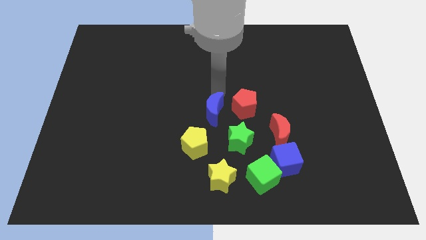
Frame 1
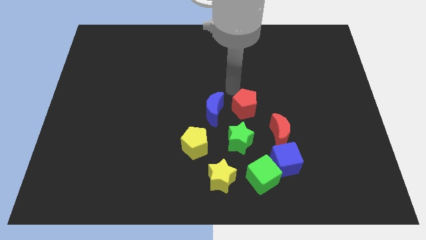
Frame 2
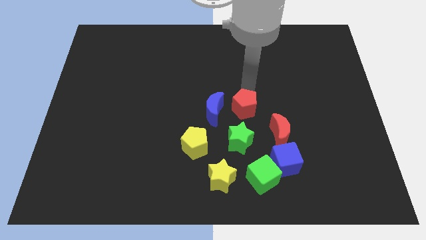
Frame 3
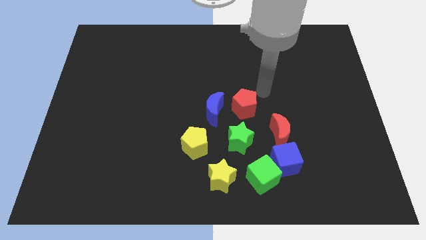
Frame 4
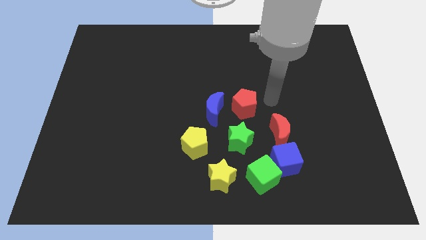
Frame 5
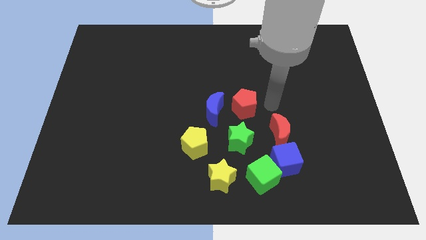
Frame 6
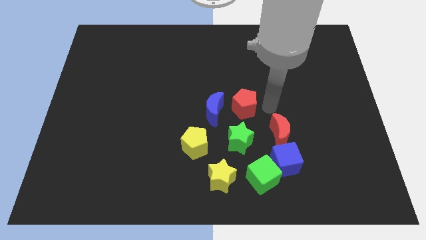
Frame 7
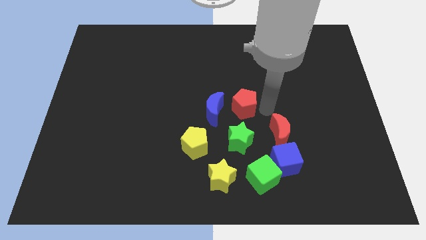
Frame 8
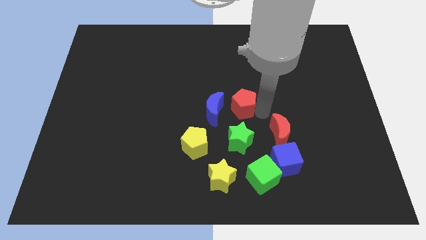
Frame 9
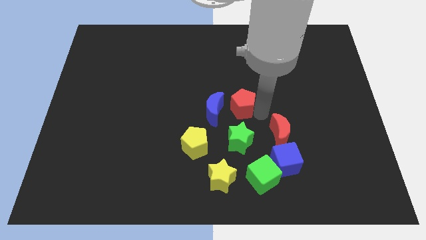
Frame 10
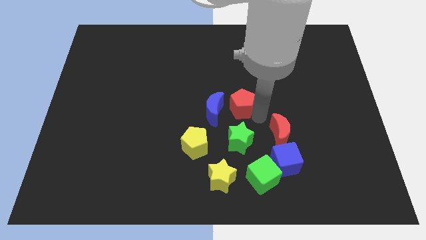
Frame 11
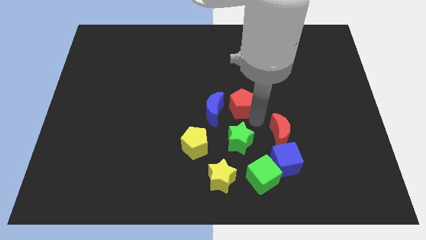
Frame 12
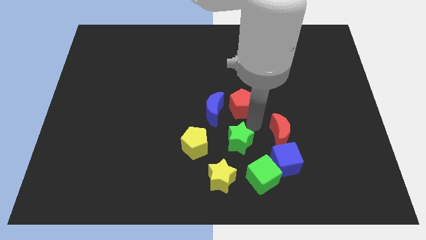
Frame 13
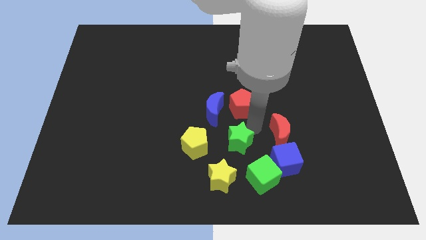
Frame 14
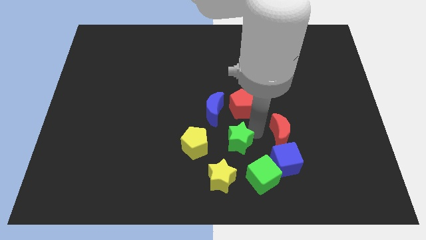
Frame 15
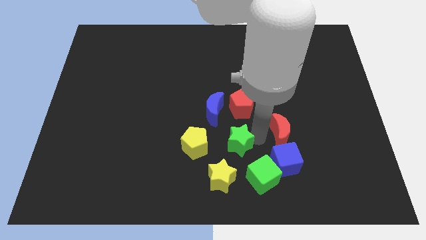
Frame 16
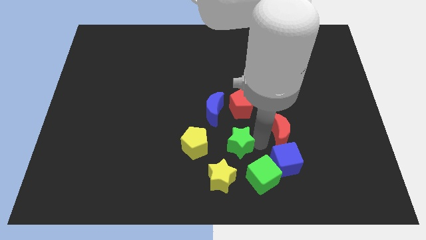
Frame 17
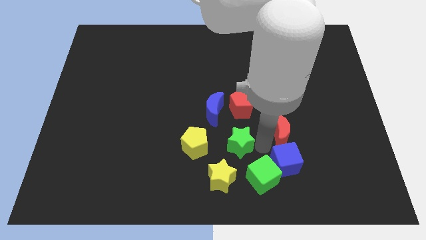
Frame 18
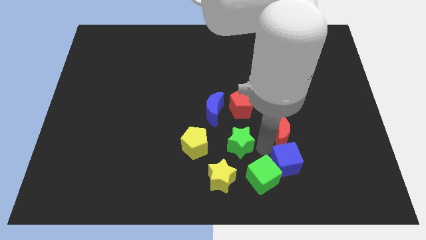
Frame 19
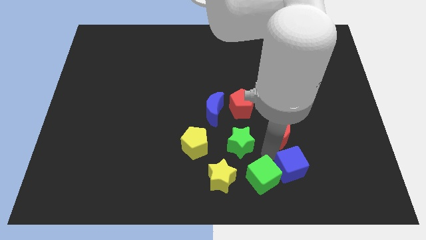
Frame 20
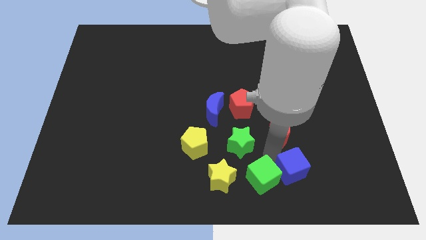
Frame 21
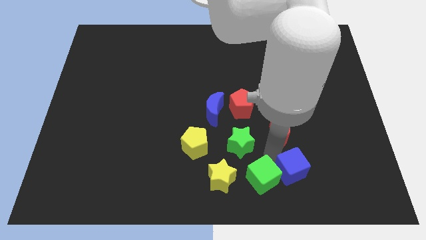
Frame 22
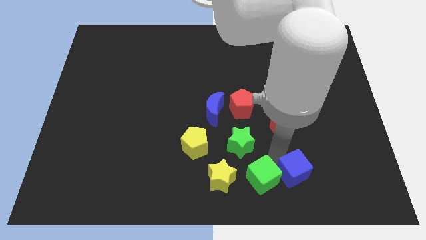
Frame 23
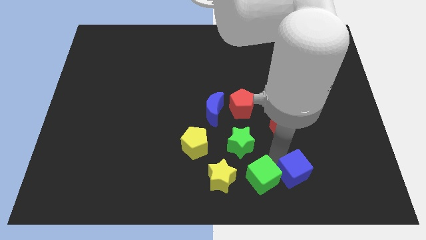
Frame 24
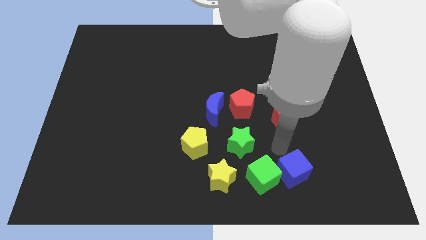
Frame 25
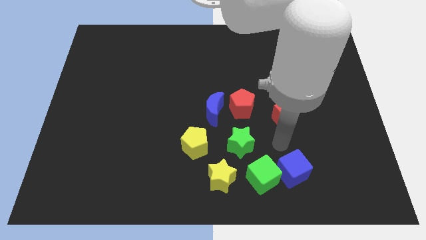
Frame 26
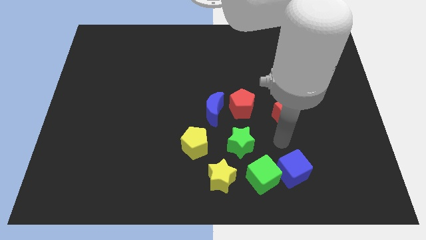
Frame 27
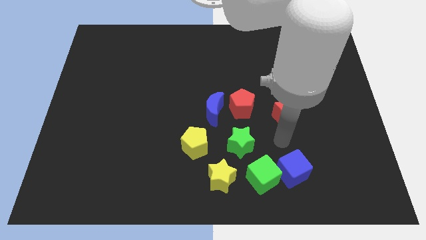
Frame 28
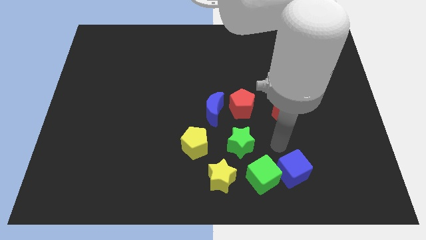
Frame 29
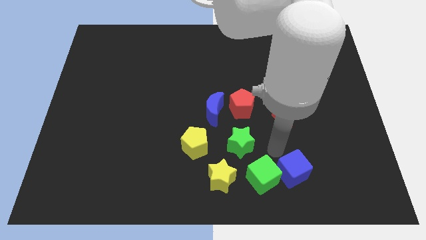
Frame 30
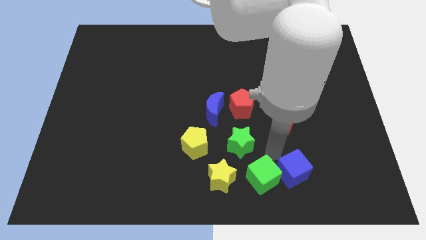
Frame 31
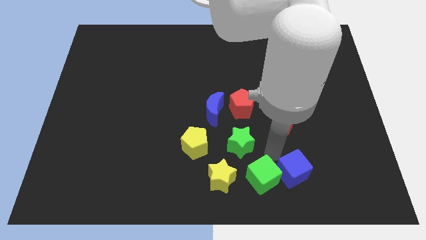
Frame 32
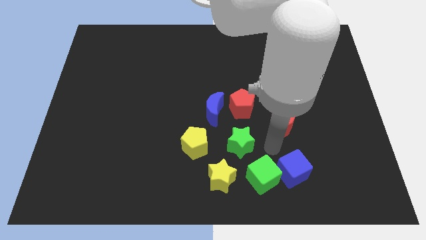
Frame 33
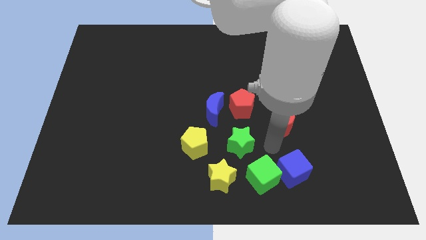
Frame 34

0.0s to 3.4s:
slightly move the blue cube to the down

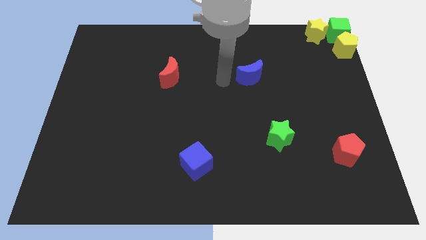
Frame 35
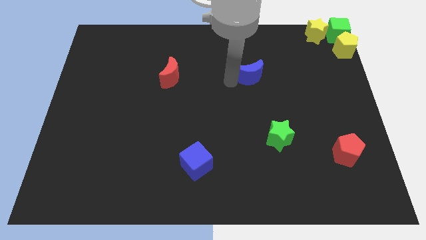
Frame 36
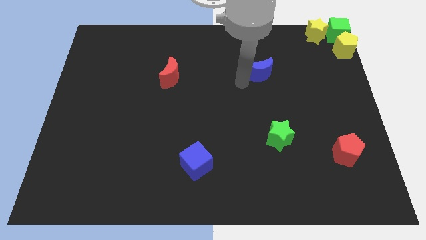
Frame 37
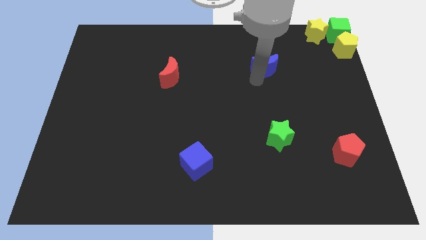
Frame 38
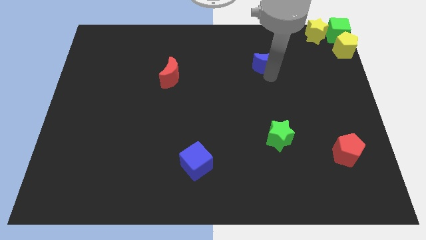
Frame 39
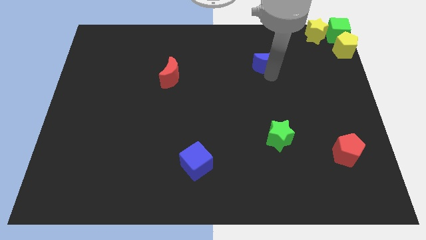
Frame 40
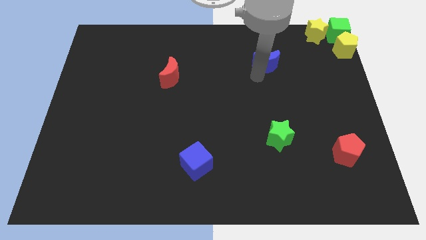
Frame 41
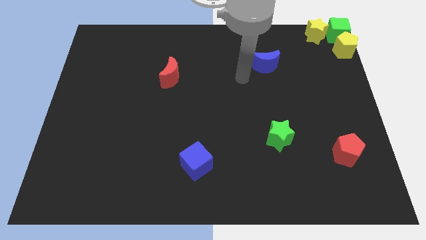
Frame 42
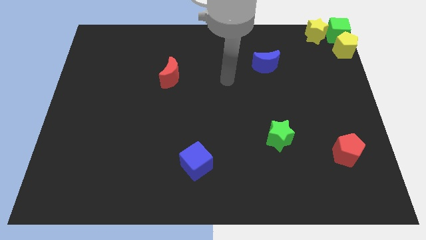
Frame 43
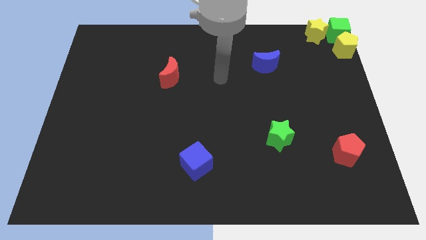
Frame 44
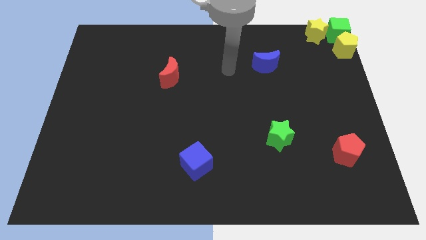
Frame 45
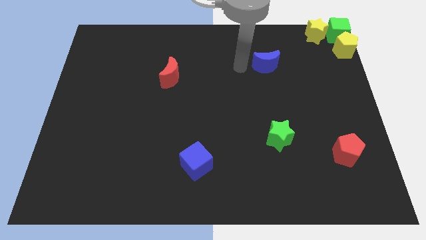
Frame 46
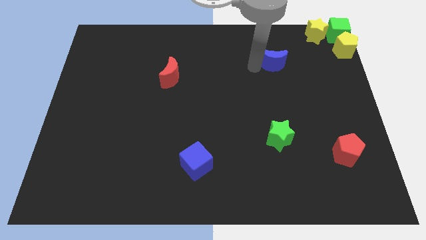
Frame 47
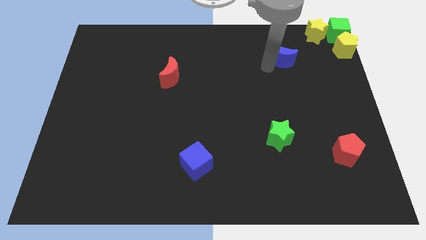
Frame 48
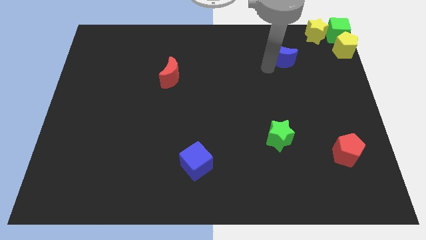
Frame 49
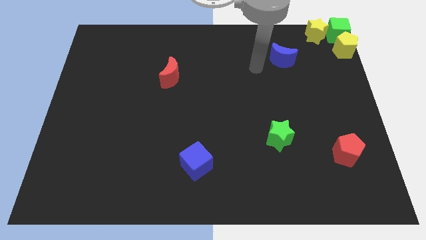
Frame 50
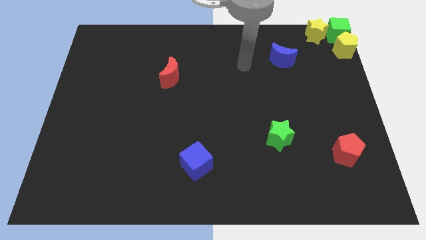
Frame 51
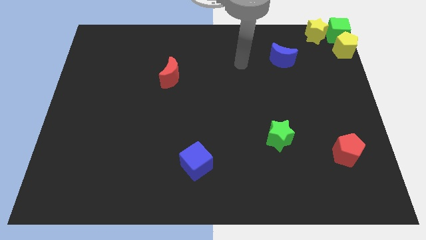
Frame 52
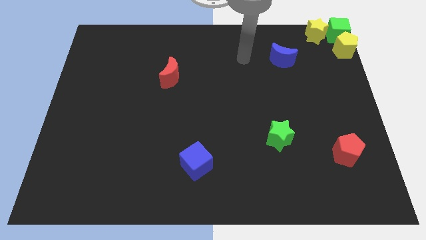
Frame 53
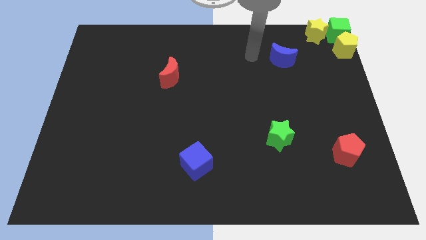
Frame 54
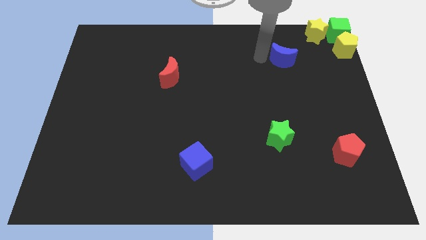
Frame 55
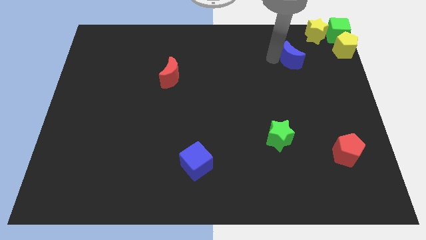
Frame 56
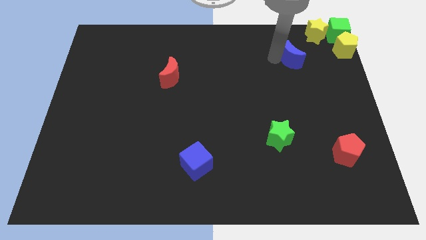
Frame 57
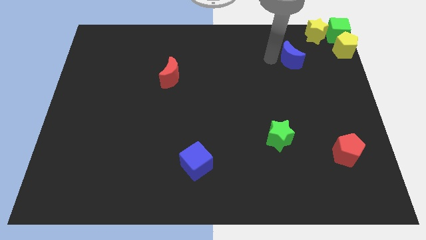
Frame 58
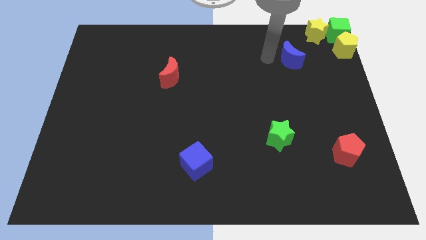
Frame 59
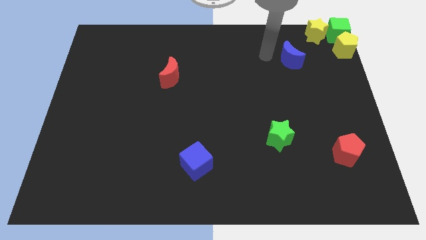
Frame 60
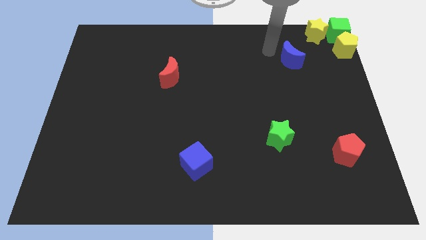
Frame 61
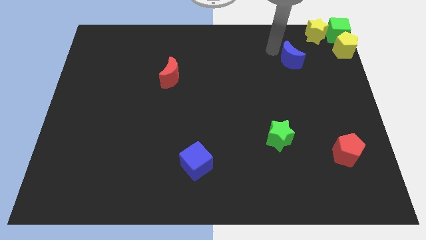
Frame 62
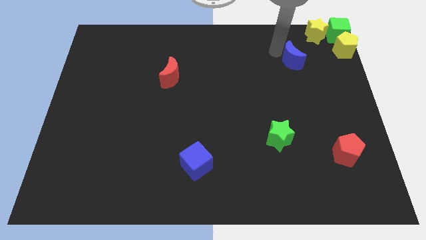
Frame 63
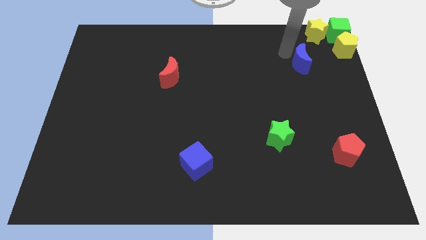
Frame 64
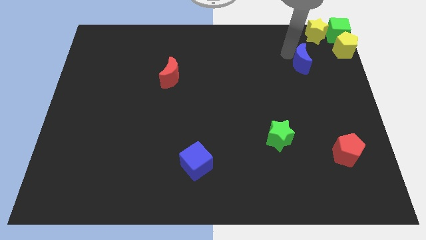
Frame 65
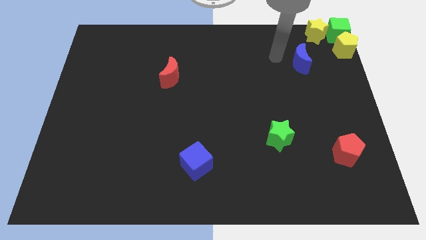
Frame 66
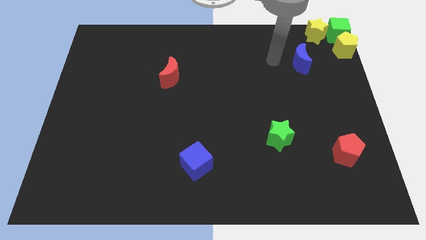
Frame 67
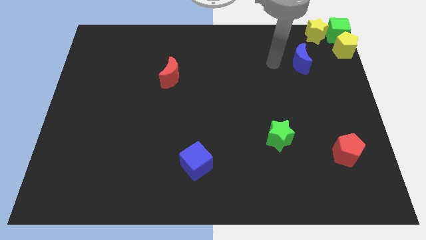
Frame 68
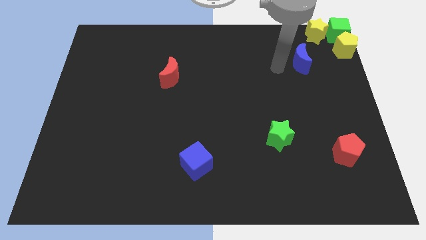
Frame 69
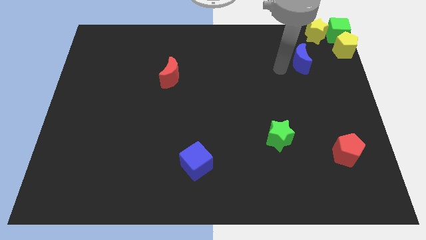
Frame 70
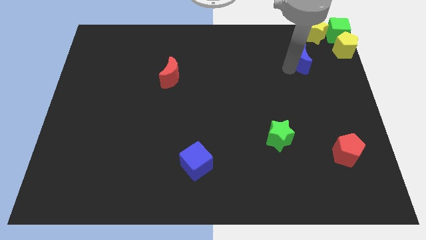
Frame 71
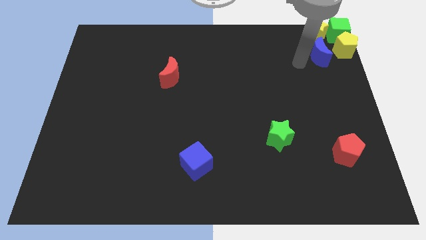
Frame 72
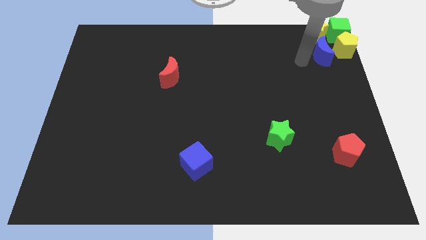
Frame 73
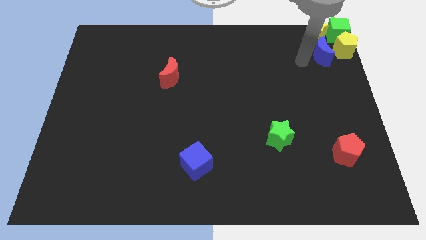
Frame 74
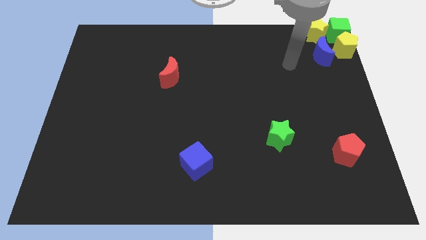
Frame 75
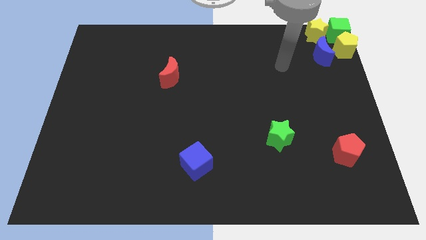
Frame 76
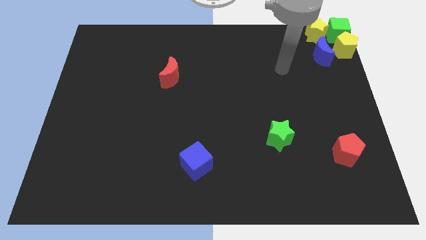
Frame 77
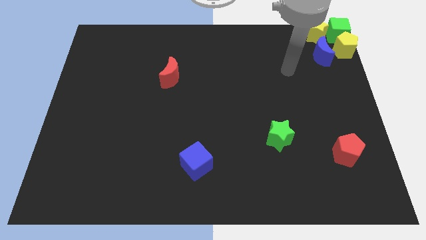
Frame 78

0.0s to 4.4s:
push the blue crescent into the other blocks

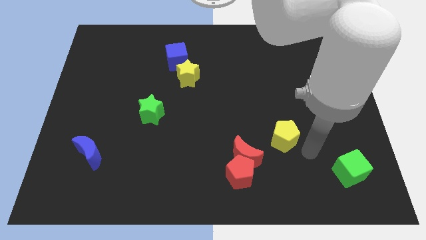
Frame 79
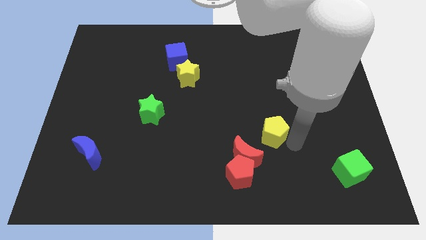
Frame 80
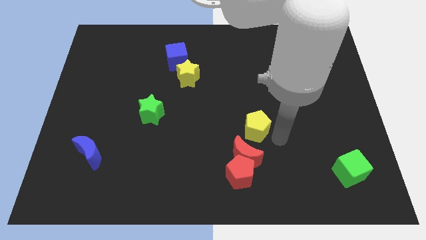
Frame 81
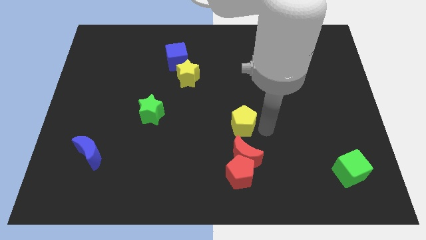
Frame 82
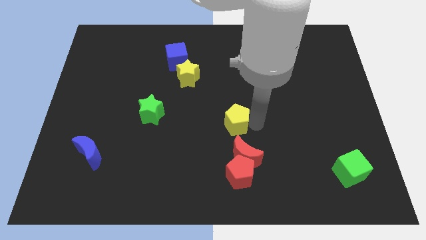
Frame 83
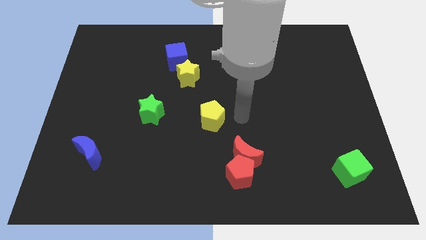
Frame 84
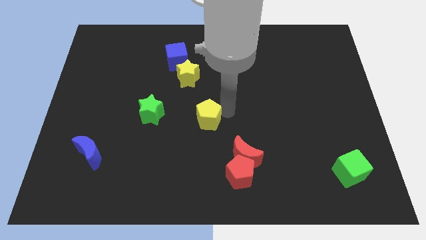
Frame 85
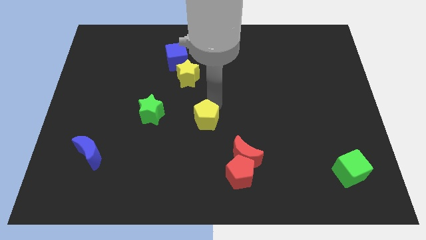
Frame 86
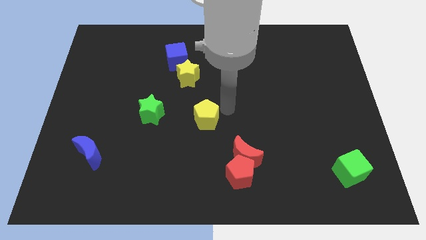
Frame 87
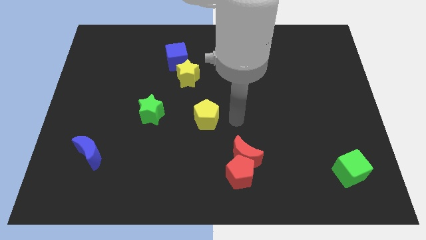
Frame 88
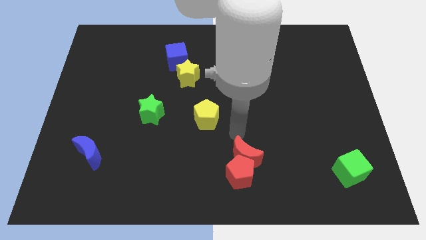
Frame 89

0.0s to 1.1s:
push the yellow pentagon to the center of the board
